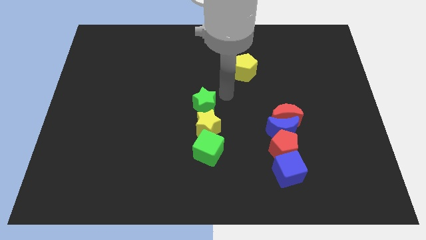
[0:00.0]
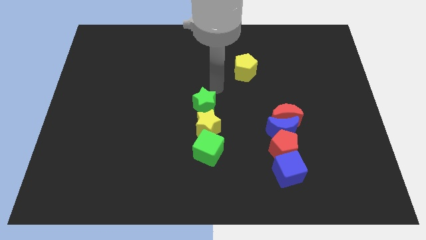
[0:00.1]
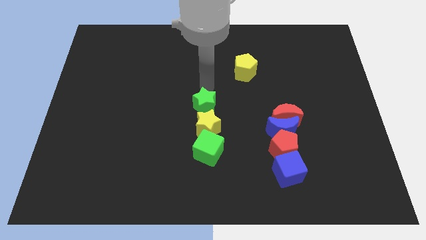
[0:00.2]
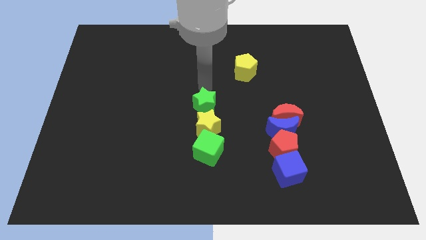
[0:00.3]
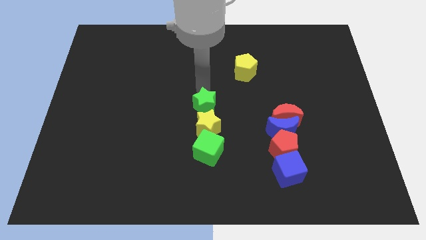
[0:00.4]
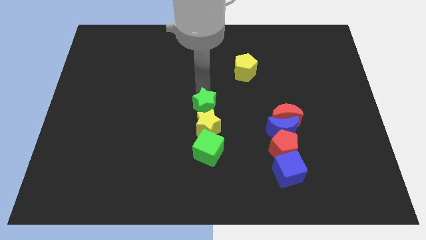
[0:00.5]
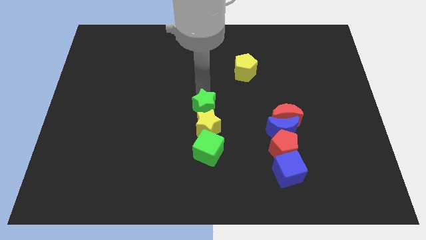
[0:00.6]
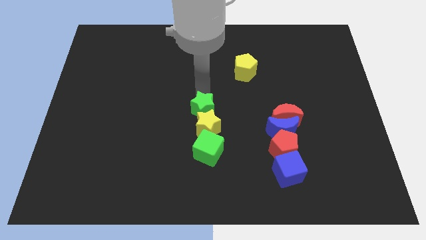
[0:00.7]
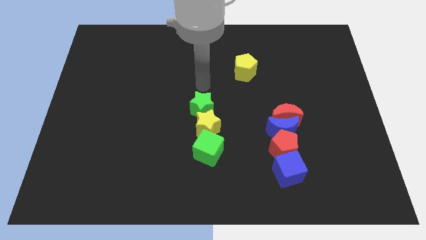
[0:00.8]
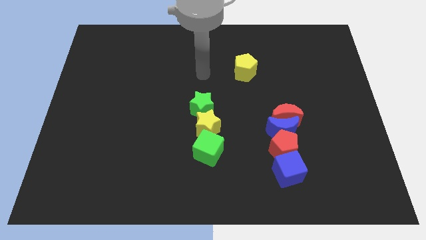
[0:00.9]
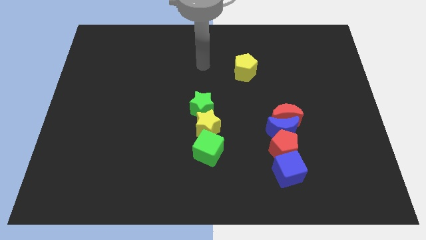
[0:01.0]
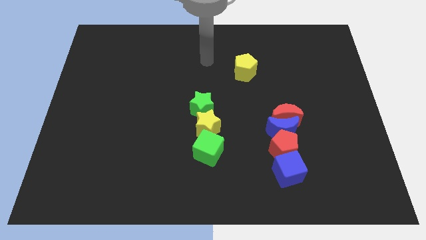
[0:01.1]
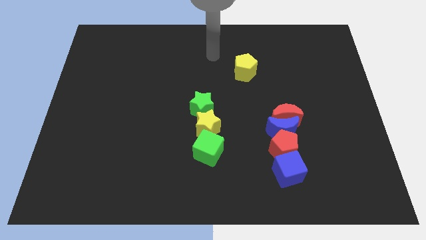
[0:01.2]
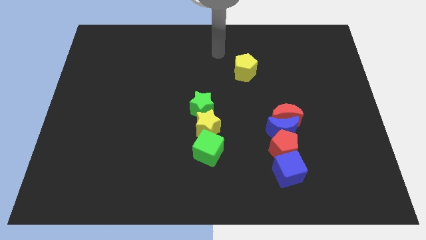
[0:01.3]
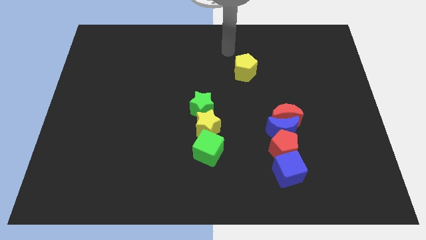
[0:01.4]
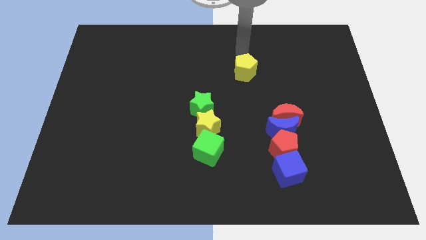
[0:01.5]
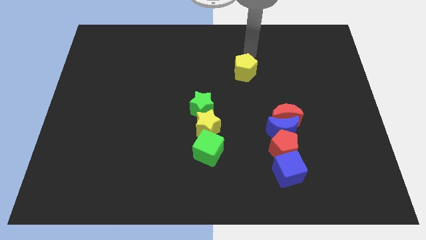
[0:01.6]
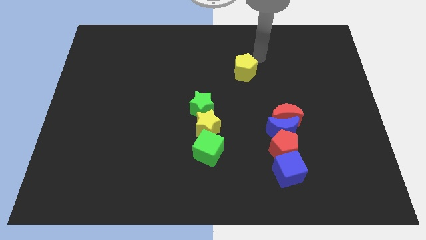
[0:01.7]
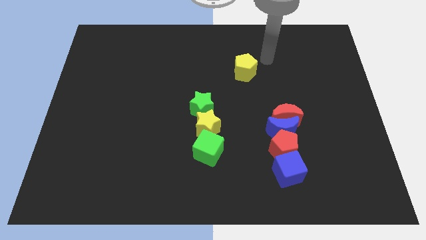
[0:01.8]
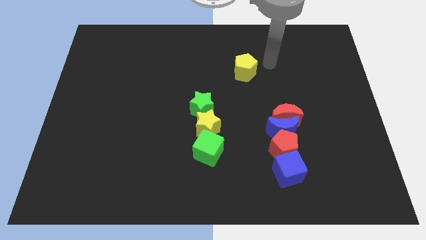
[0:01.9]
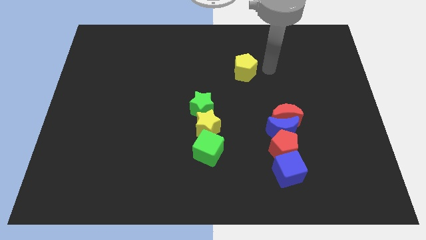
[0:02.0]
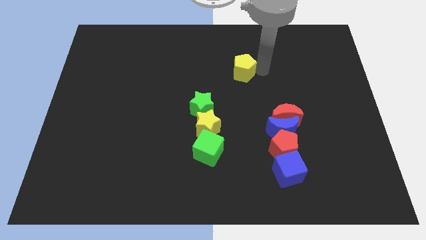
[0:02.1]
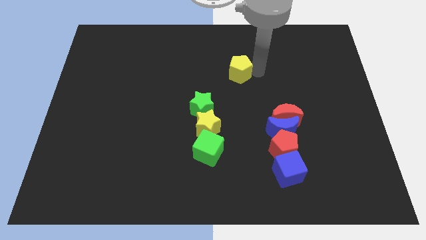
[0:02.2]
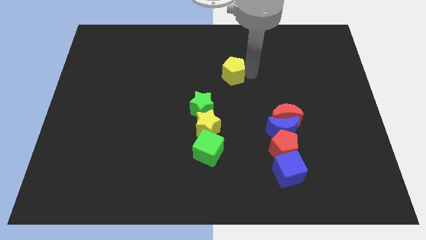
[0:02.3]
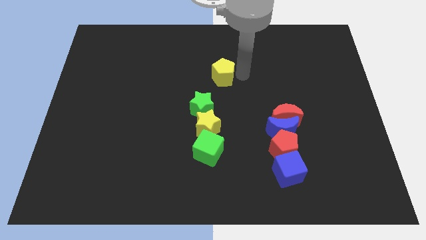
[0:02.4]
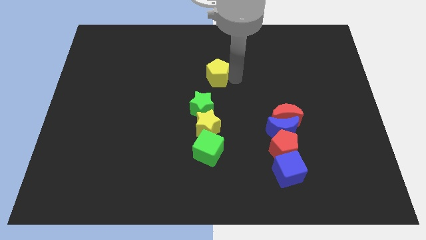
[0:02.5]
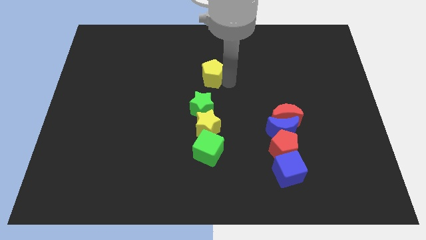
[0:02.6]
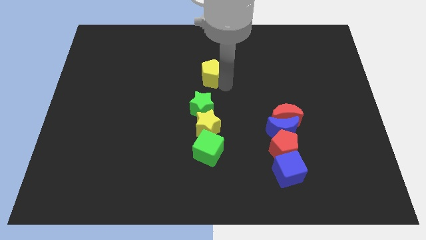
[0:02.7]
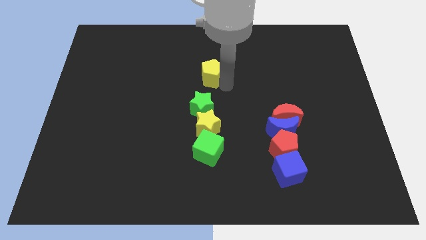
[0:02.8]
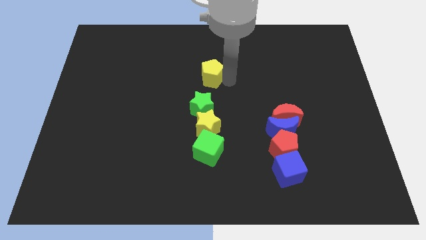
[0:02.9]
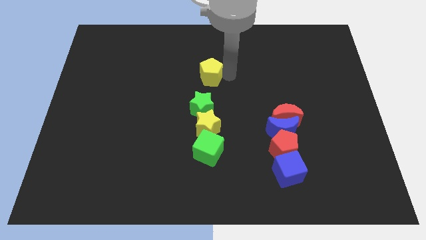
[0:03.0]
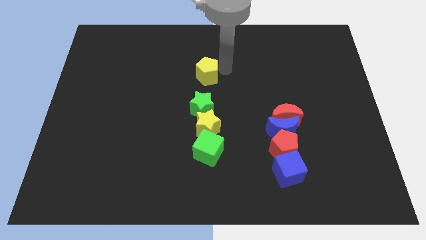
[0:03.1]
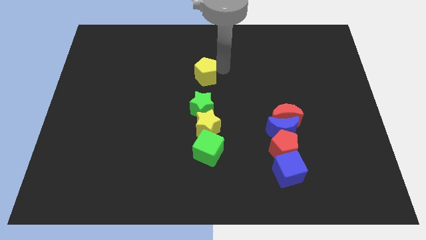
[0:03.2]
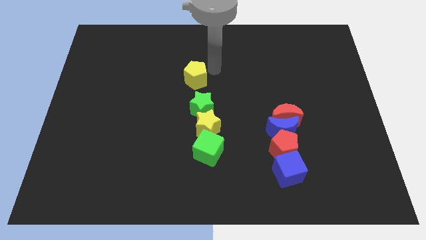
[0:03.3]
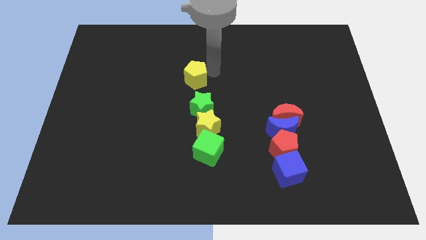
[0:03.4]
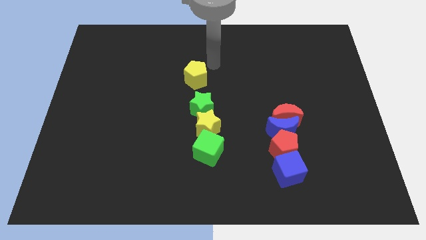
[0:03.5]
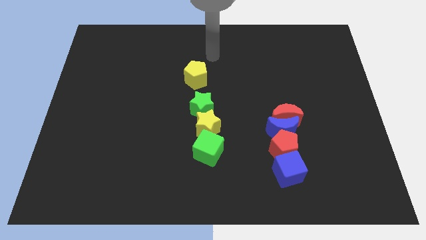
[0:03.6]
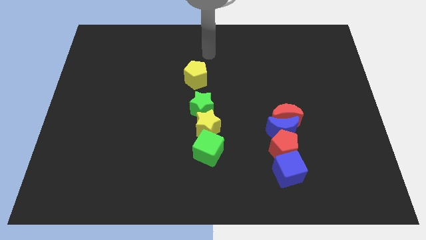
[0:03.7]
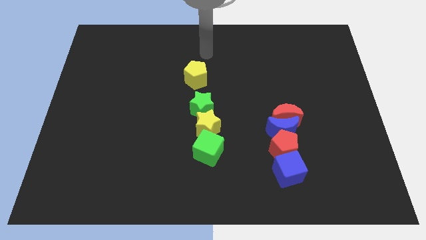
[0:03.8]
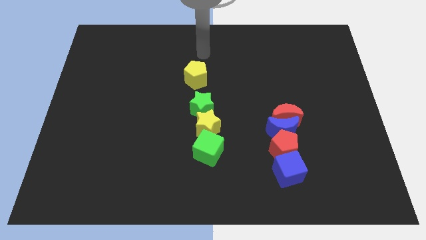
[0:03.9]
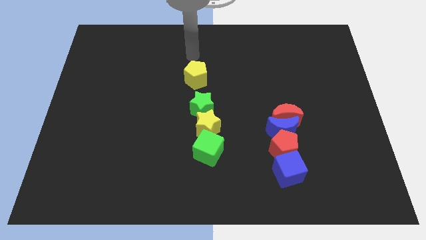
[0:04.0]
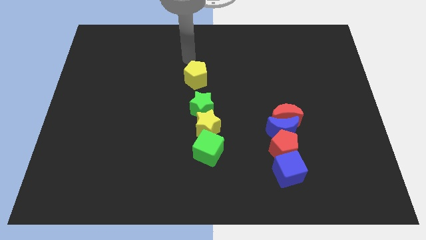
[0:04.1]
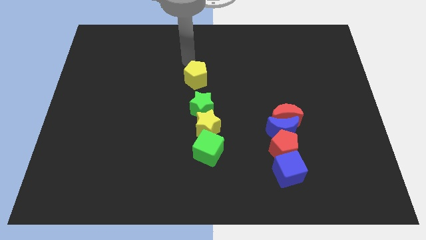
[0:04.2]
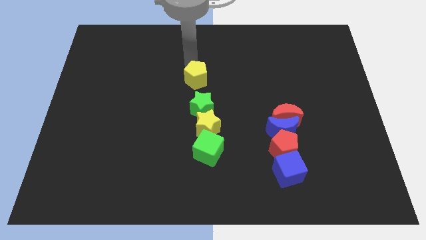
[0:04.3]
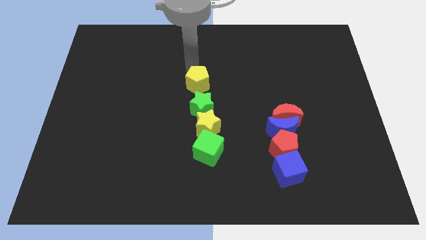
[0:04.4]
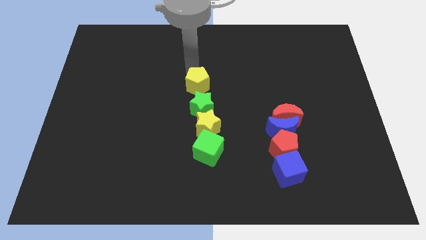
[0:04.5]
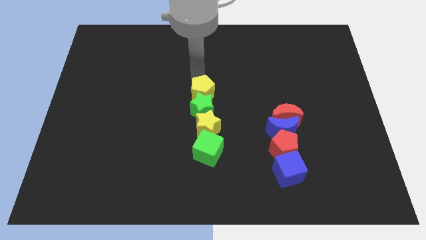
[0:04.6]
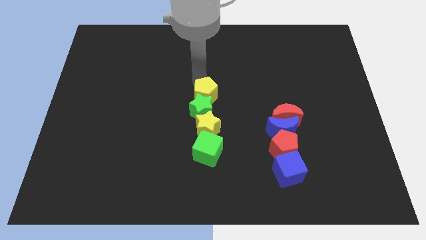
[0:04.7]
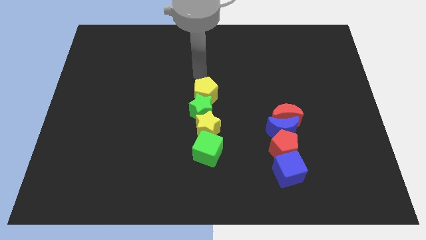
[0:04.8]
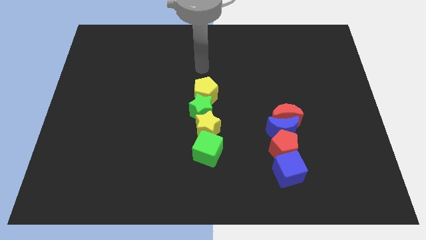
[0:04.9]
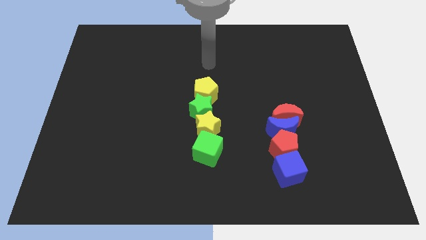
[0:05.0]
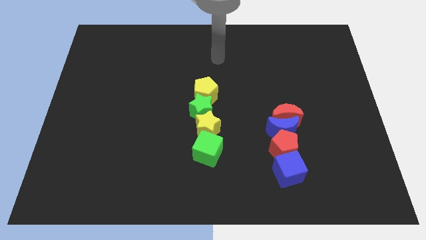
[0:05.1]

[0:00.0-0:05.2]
push the yellow pentagon above the green star

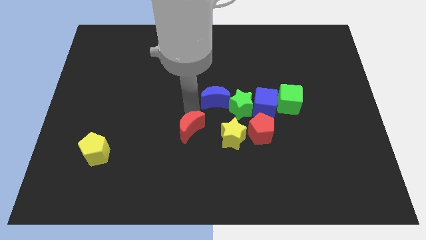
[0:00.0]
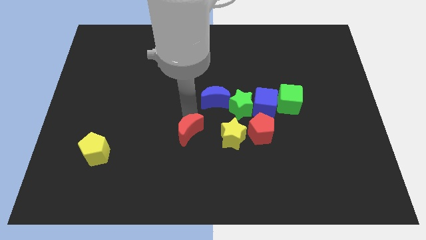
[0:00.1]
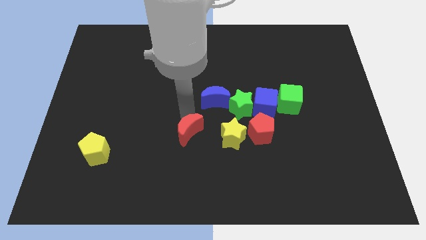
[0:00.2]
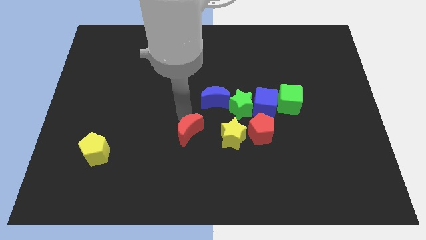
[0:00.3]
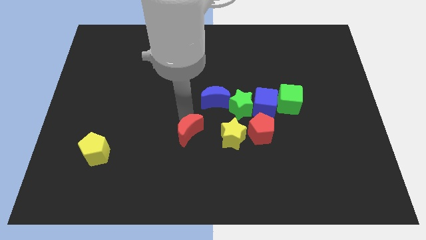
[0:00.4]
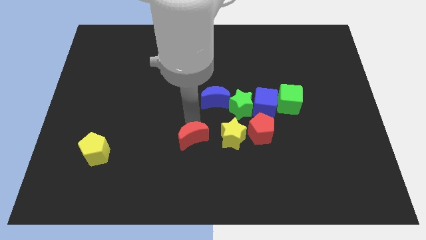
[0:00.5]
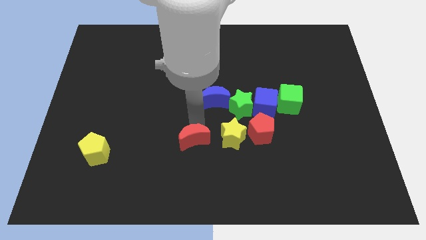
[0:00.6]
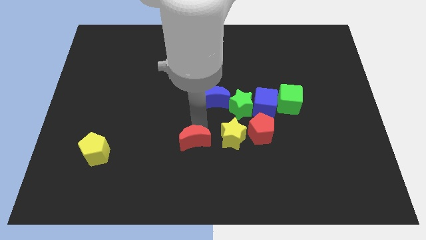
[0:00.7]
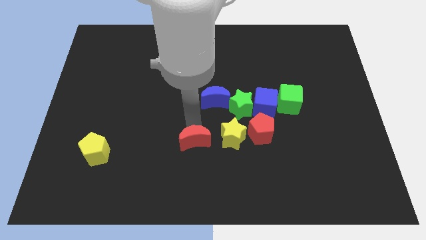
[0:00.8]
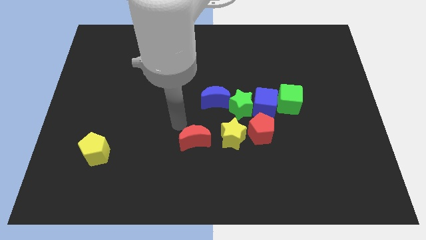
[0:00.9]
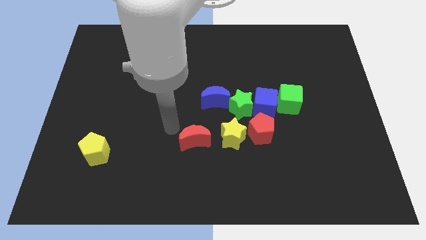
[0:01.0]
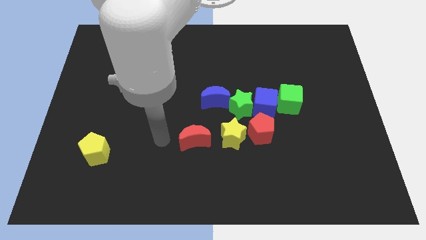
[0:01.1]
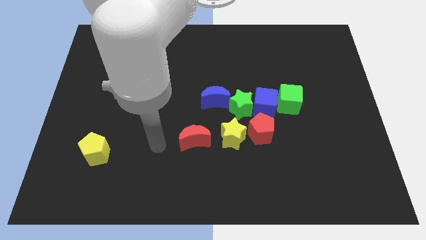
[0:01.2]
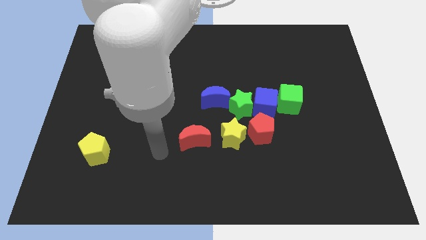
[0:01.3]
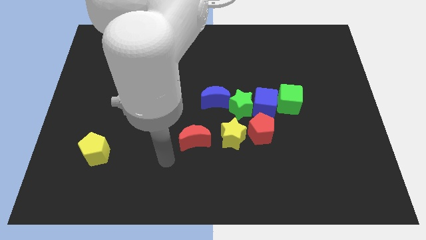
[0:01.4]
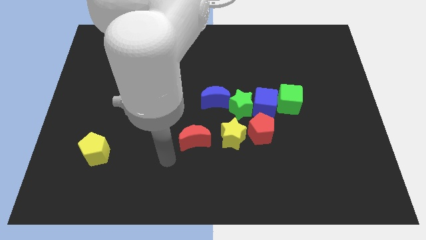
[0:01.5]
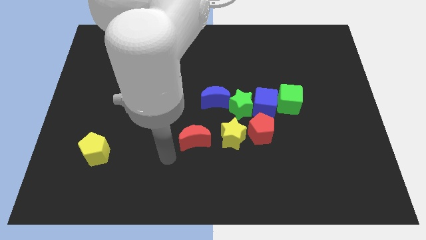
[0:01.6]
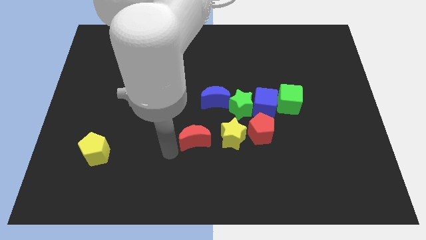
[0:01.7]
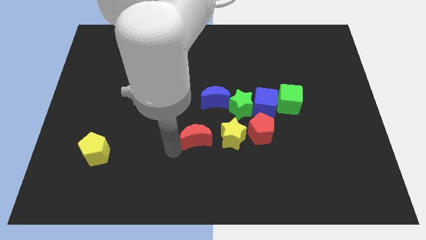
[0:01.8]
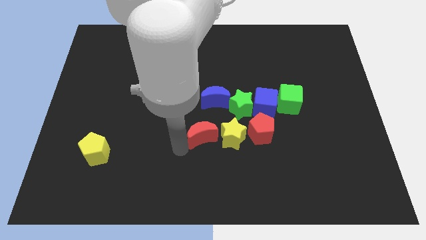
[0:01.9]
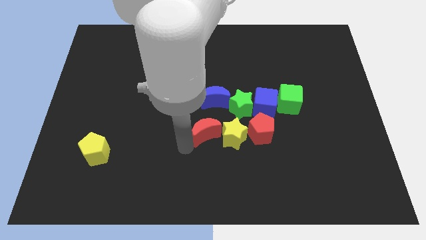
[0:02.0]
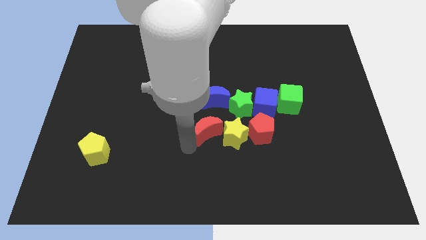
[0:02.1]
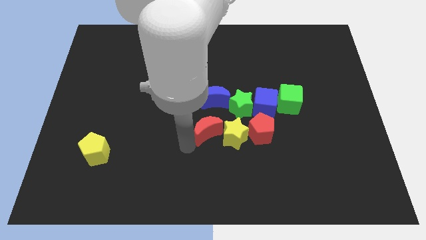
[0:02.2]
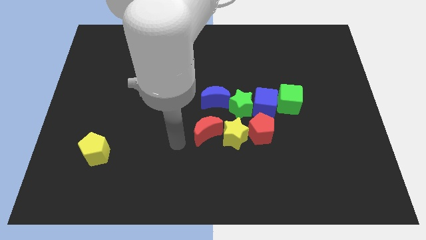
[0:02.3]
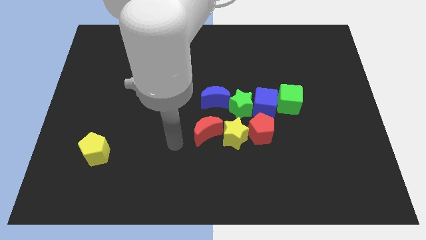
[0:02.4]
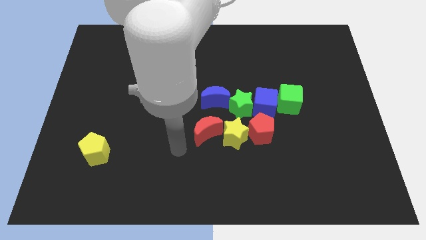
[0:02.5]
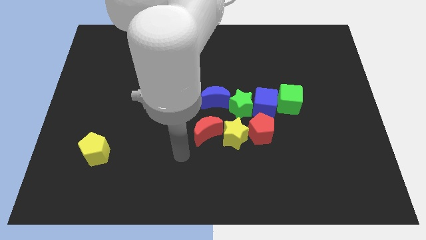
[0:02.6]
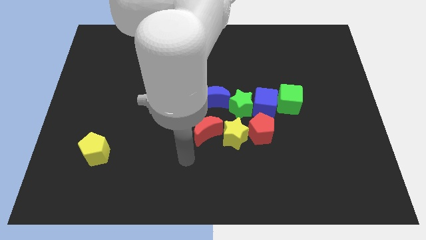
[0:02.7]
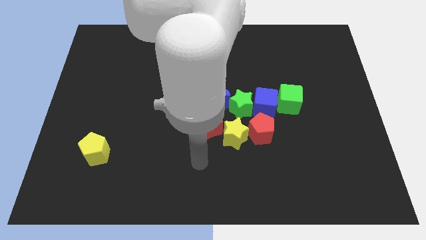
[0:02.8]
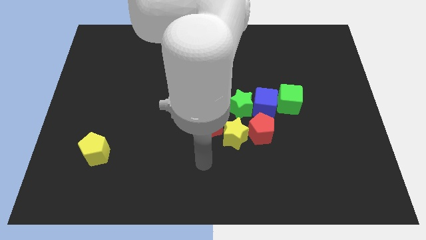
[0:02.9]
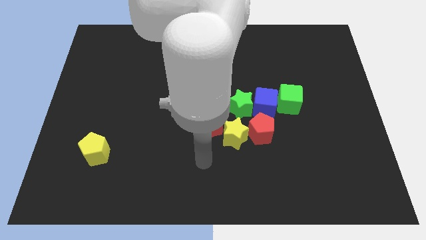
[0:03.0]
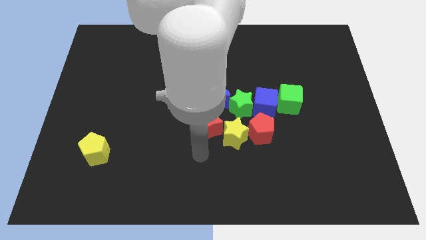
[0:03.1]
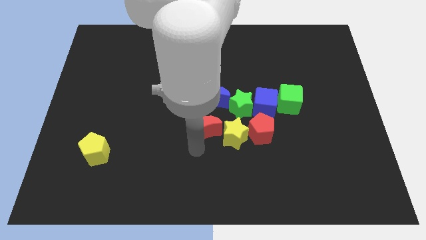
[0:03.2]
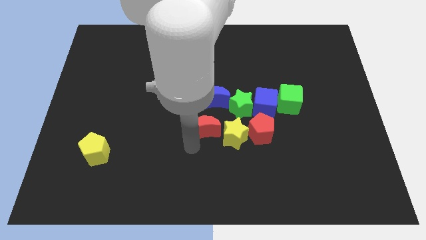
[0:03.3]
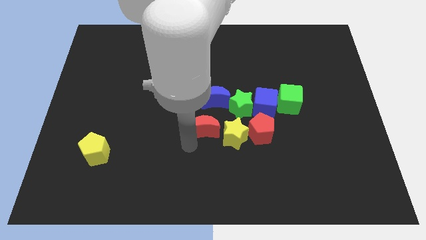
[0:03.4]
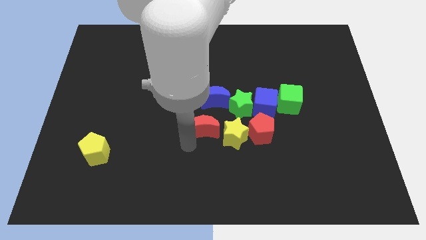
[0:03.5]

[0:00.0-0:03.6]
push the red moon into the yellow star

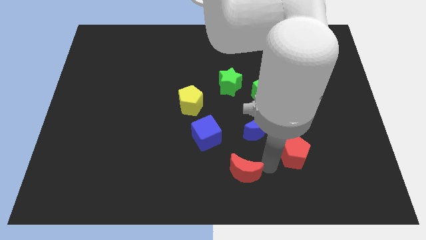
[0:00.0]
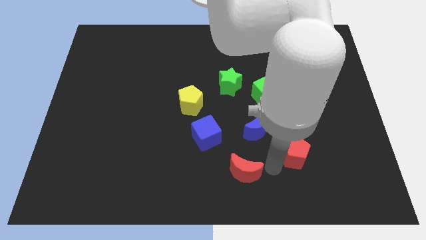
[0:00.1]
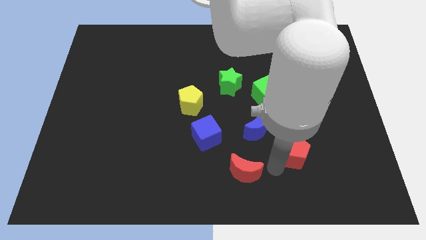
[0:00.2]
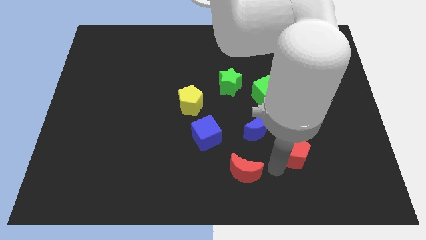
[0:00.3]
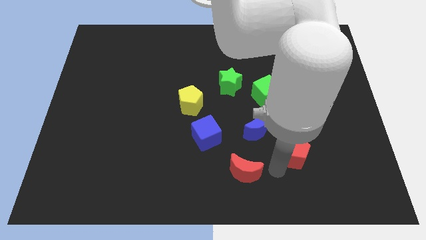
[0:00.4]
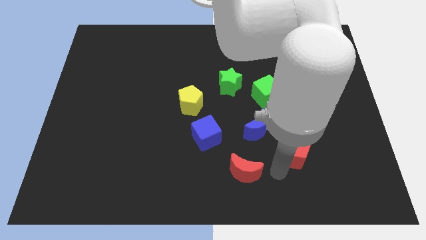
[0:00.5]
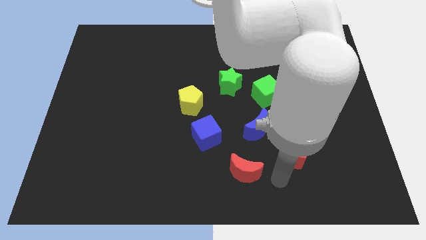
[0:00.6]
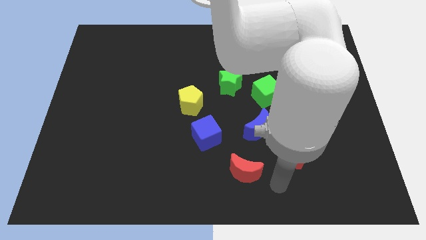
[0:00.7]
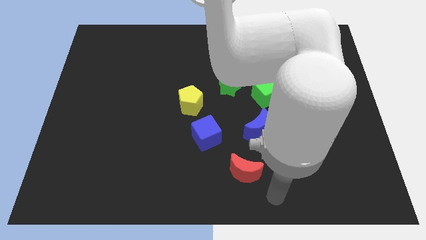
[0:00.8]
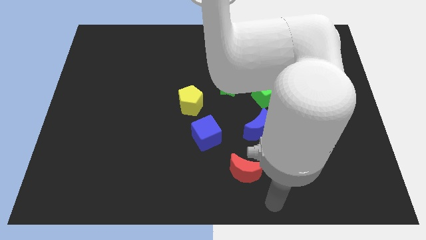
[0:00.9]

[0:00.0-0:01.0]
move the arm away from the red moon
